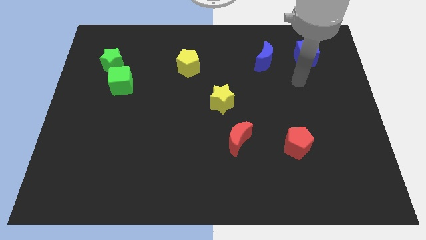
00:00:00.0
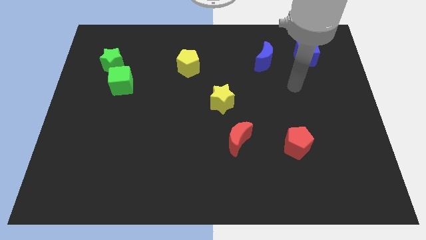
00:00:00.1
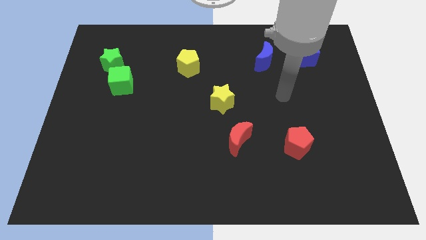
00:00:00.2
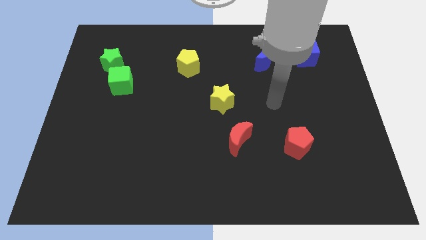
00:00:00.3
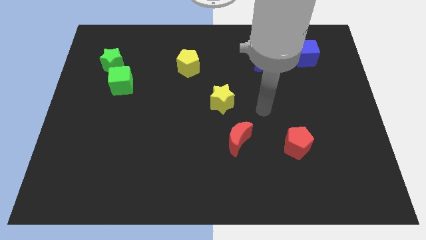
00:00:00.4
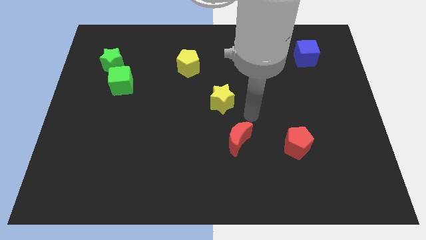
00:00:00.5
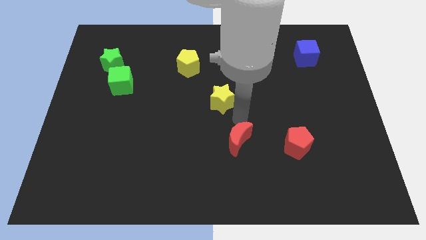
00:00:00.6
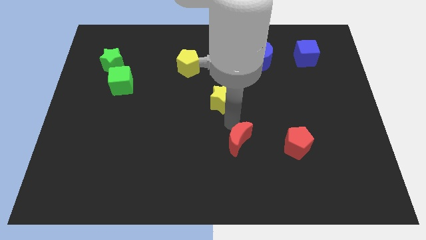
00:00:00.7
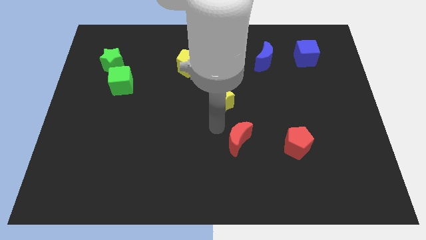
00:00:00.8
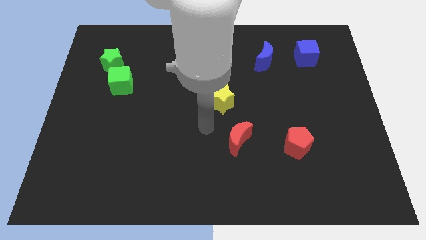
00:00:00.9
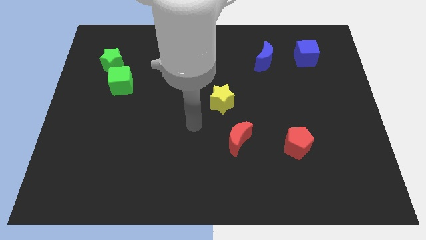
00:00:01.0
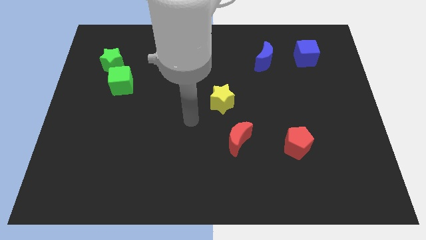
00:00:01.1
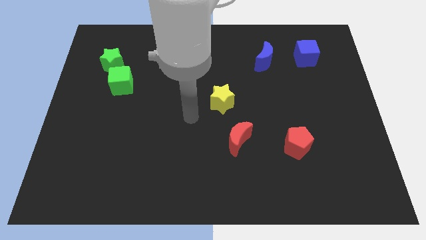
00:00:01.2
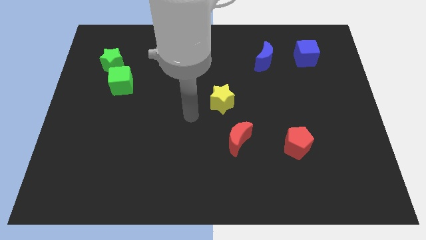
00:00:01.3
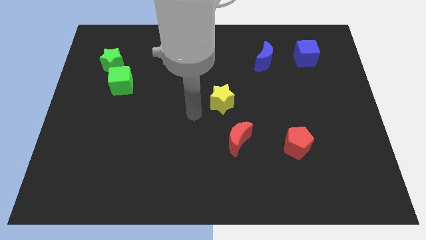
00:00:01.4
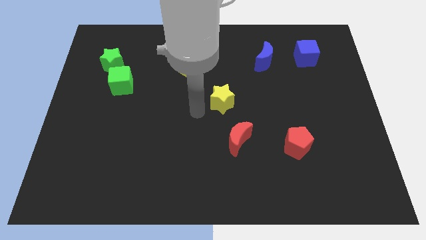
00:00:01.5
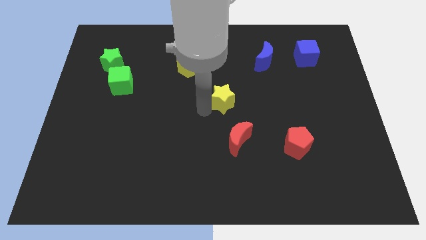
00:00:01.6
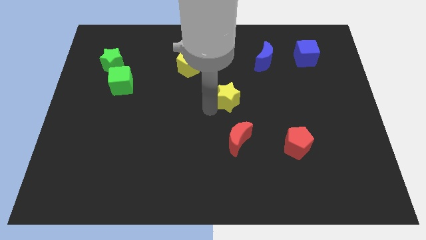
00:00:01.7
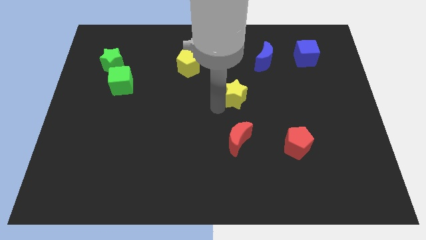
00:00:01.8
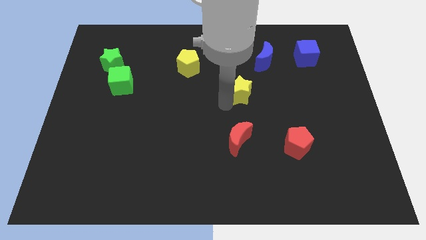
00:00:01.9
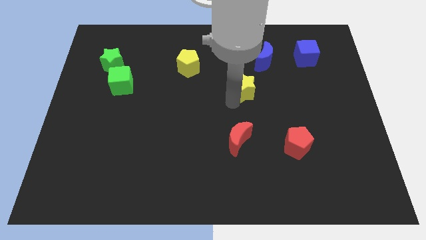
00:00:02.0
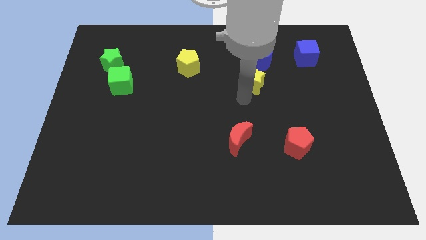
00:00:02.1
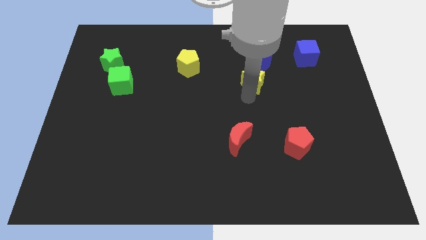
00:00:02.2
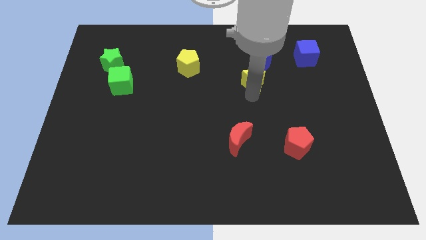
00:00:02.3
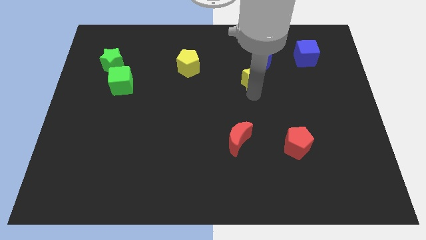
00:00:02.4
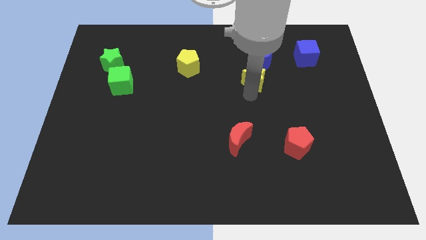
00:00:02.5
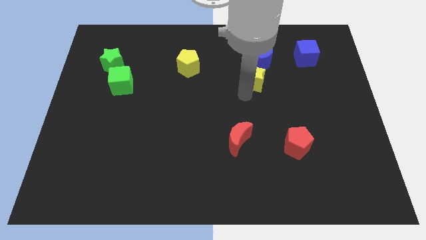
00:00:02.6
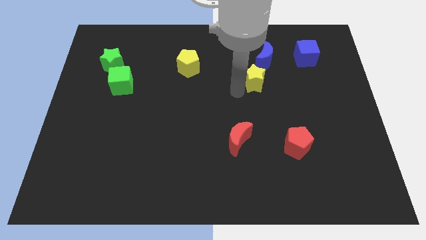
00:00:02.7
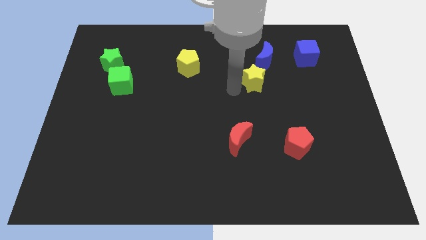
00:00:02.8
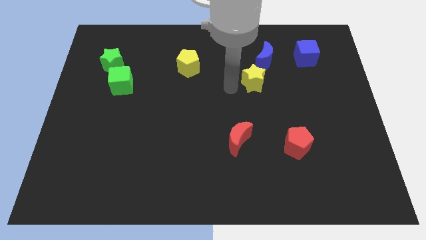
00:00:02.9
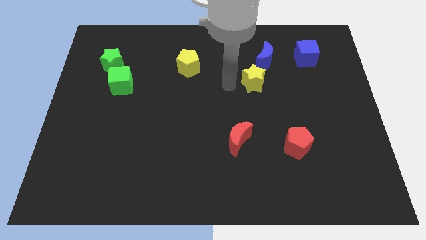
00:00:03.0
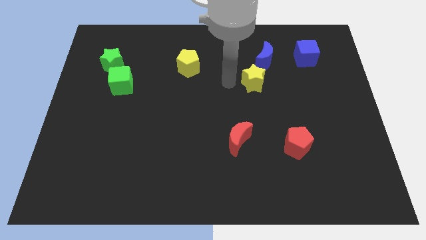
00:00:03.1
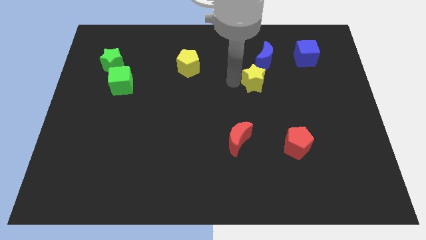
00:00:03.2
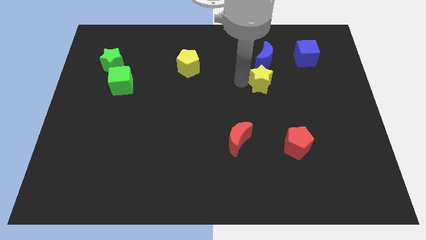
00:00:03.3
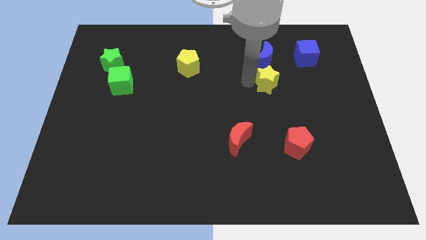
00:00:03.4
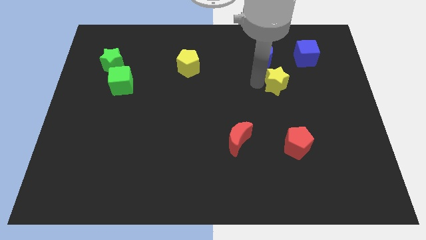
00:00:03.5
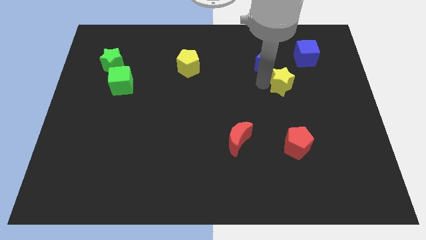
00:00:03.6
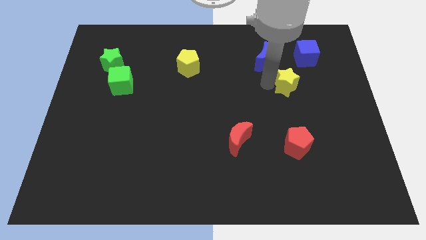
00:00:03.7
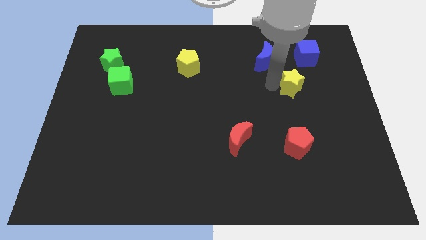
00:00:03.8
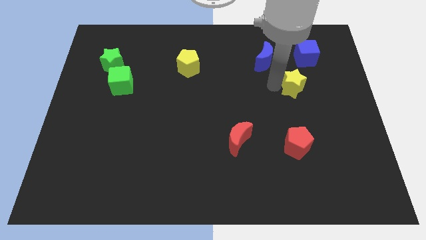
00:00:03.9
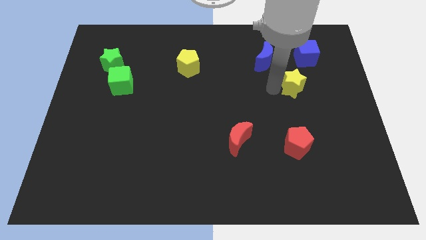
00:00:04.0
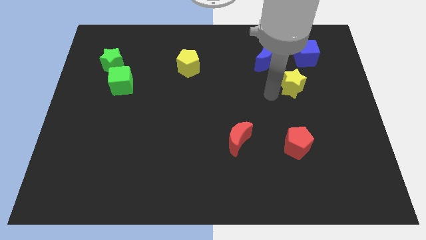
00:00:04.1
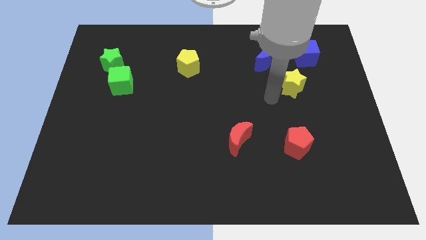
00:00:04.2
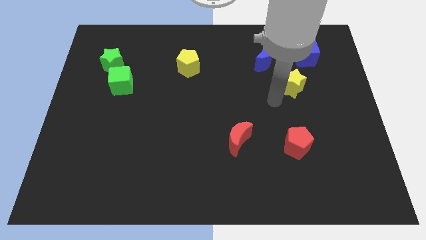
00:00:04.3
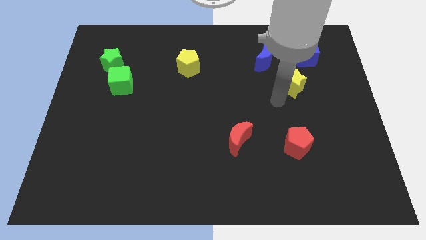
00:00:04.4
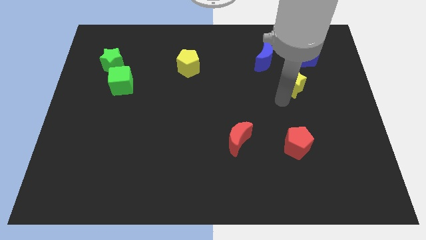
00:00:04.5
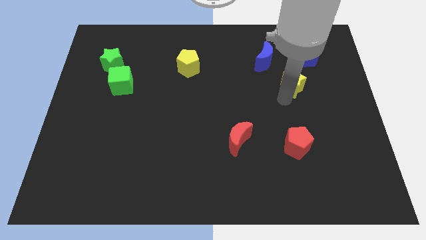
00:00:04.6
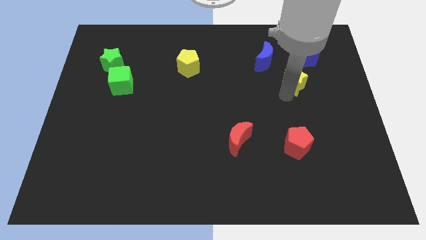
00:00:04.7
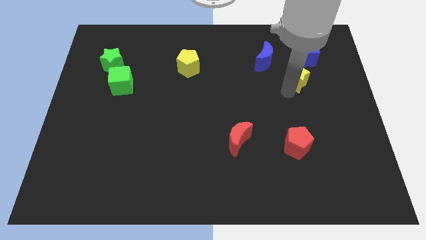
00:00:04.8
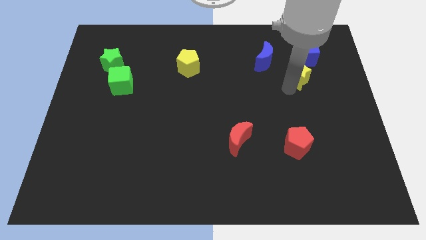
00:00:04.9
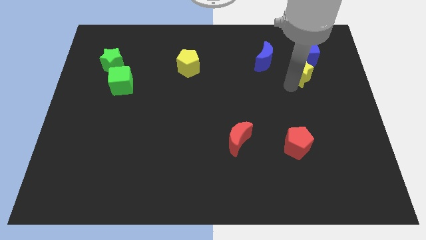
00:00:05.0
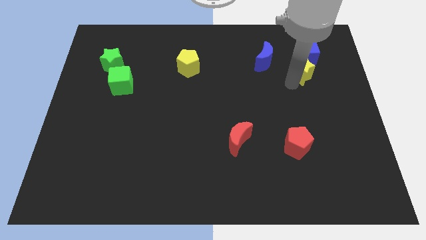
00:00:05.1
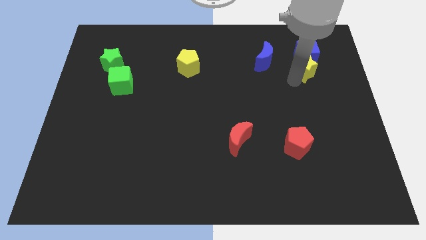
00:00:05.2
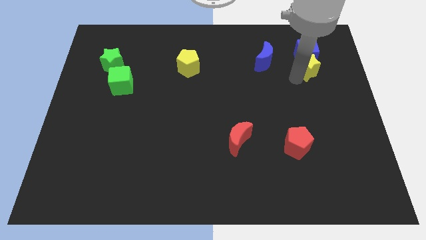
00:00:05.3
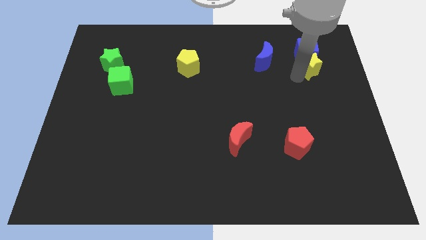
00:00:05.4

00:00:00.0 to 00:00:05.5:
put the yellow star towards the blue cube

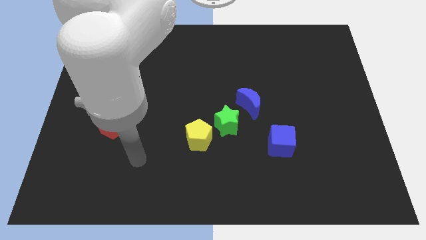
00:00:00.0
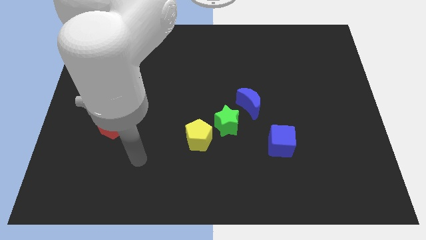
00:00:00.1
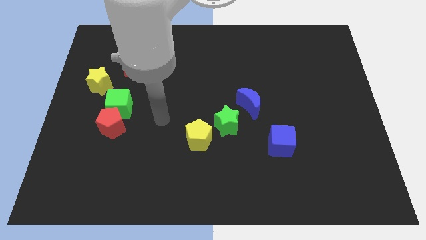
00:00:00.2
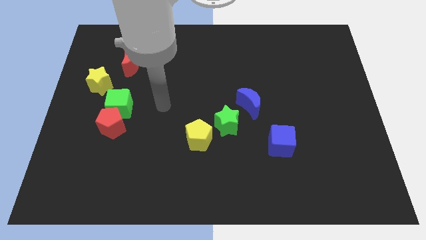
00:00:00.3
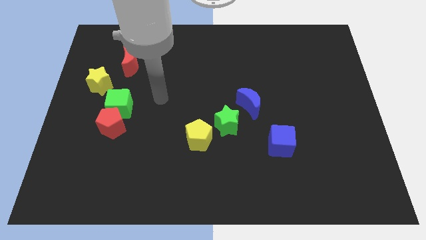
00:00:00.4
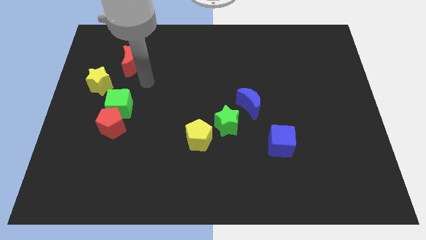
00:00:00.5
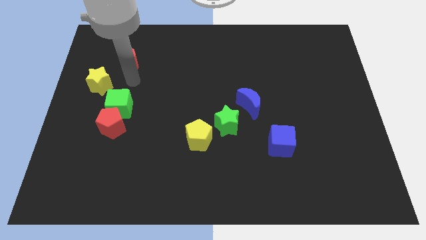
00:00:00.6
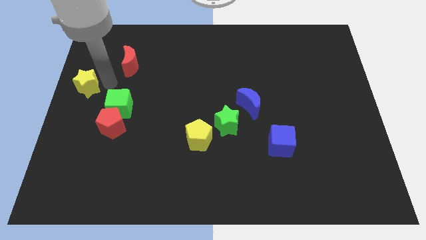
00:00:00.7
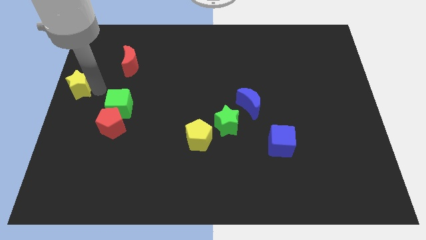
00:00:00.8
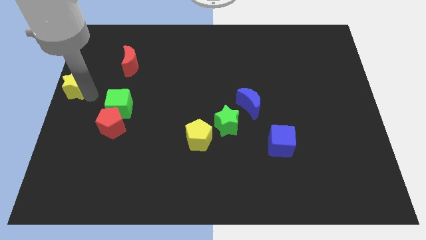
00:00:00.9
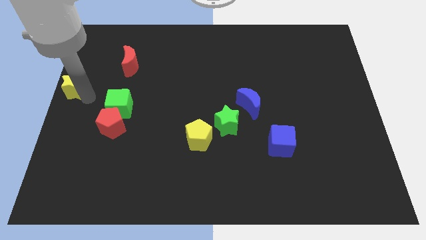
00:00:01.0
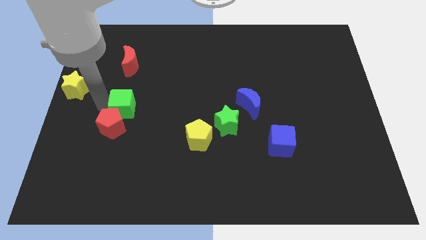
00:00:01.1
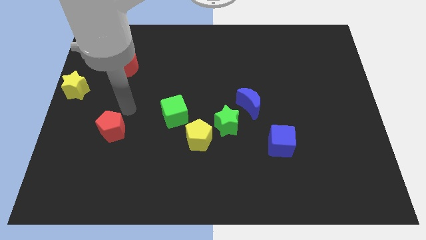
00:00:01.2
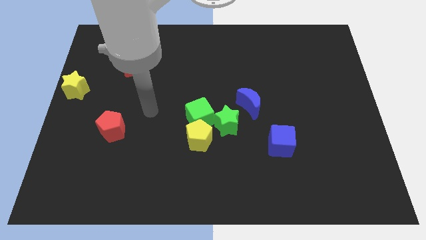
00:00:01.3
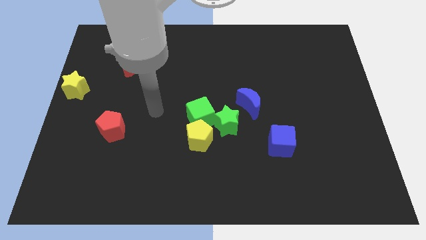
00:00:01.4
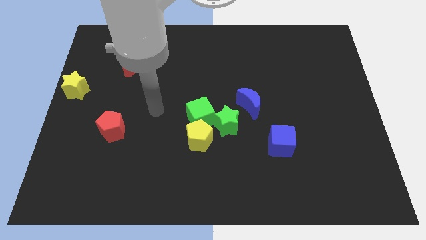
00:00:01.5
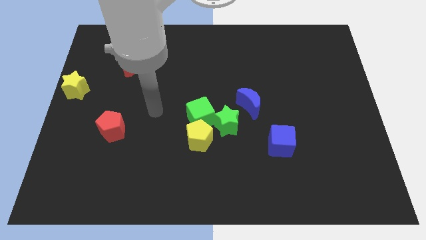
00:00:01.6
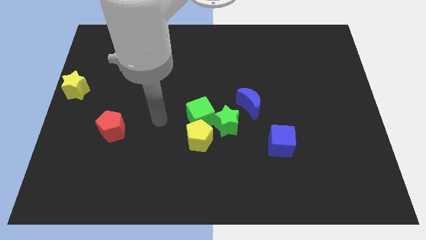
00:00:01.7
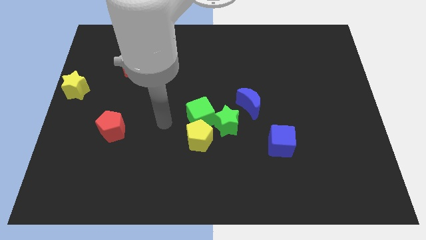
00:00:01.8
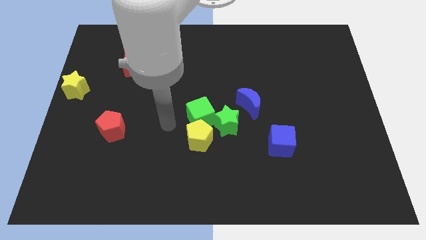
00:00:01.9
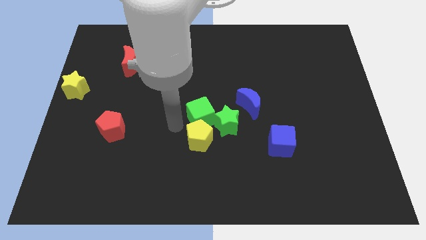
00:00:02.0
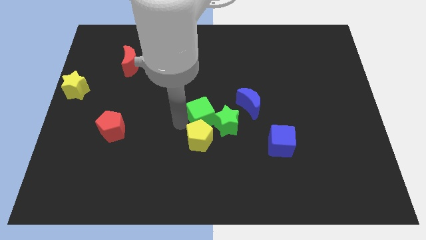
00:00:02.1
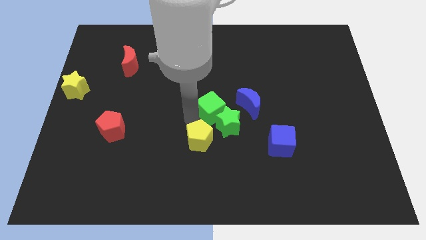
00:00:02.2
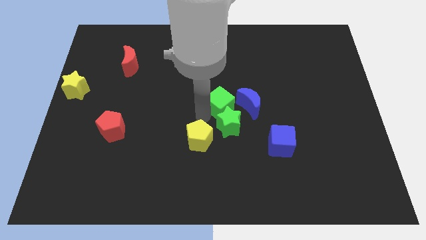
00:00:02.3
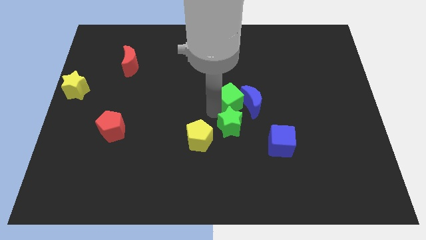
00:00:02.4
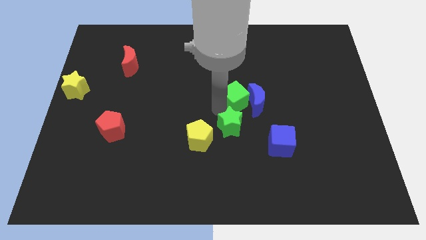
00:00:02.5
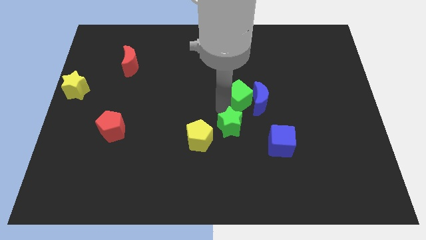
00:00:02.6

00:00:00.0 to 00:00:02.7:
push the green cube close to the blue moon
